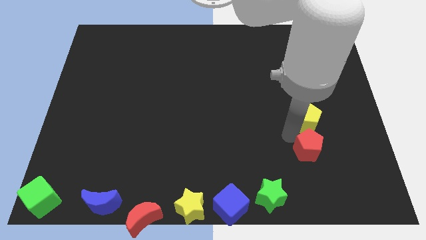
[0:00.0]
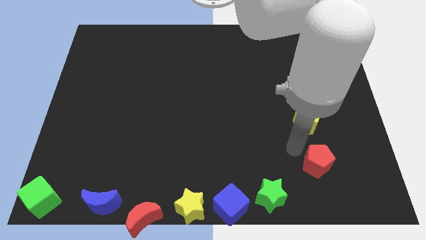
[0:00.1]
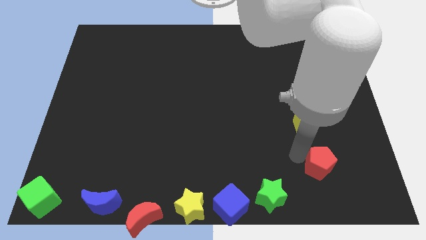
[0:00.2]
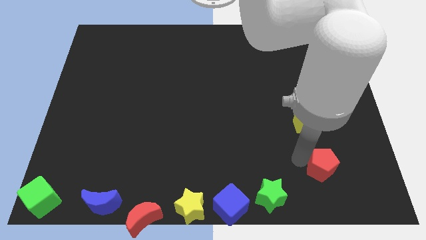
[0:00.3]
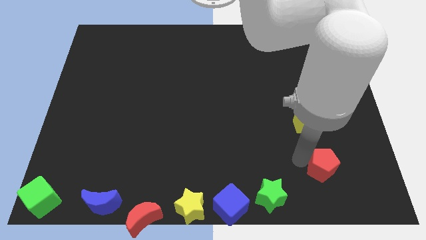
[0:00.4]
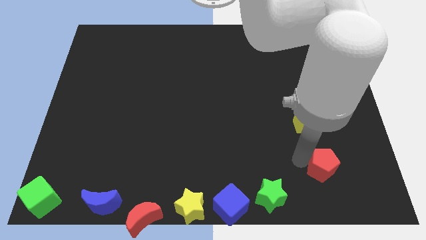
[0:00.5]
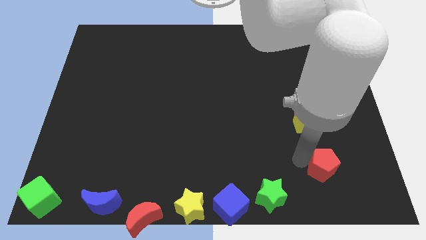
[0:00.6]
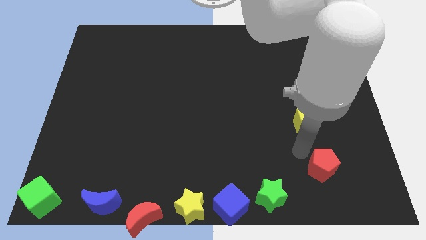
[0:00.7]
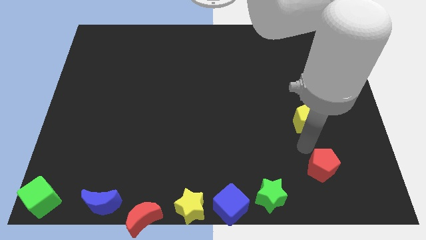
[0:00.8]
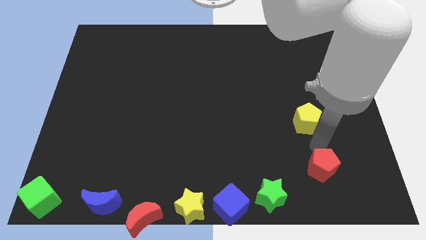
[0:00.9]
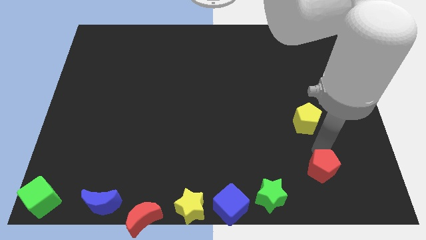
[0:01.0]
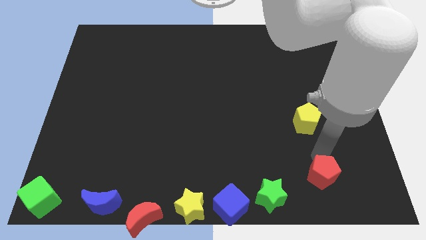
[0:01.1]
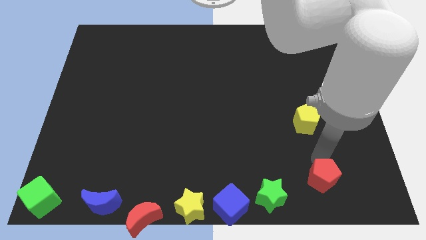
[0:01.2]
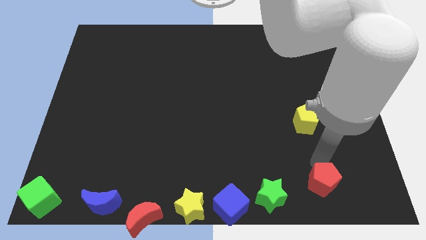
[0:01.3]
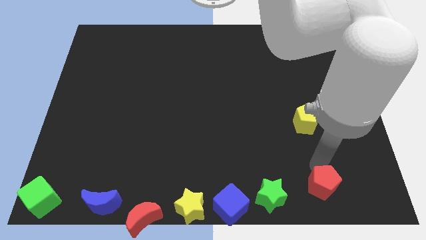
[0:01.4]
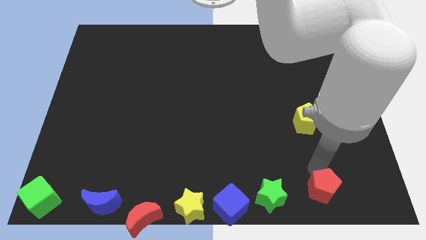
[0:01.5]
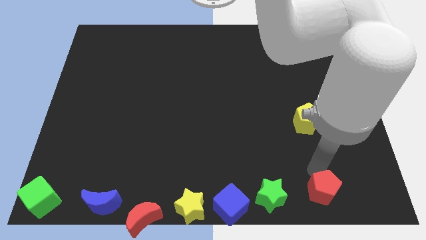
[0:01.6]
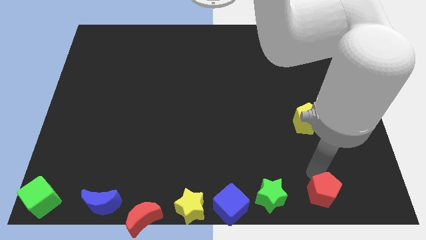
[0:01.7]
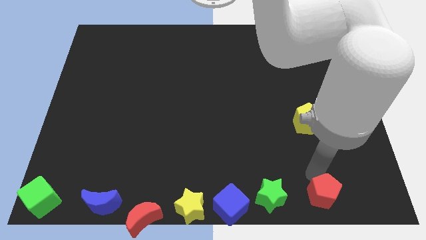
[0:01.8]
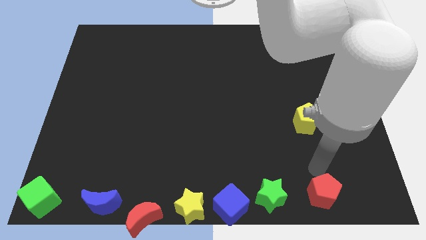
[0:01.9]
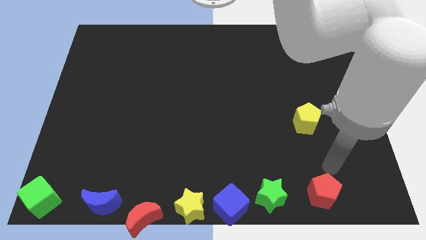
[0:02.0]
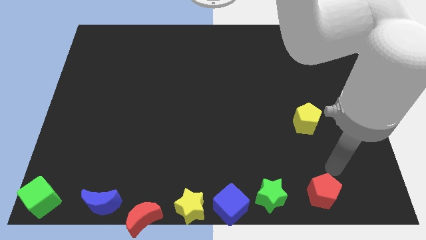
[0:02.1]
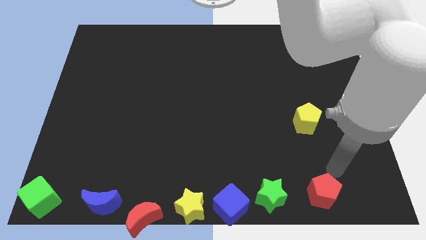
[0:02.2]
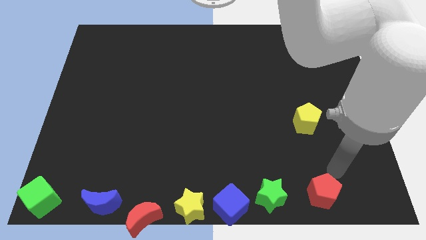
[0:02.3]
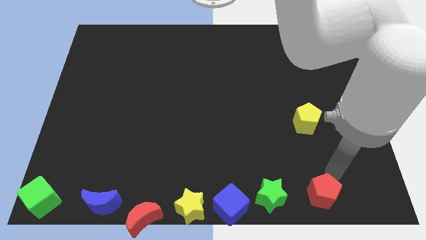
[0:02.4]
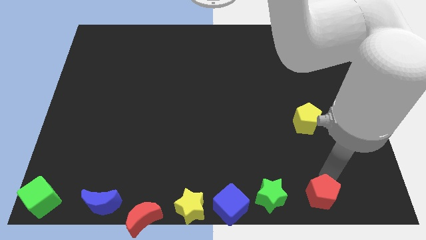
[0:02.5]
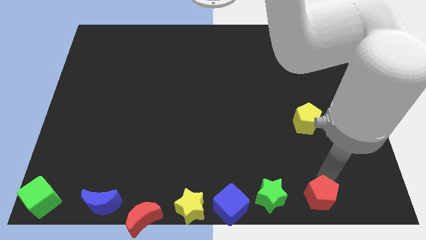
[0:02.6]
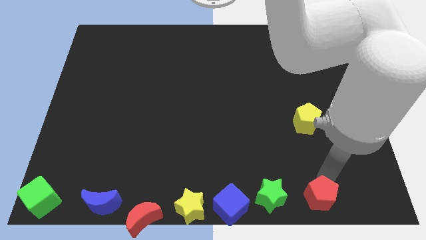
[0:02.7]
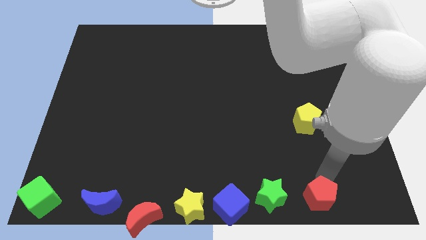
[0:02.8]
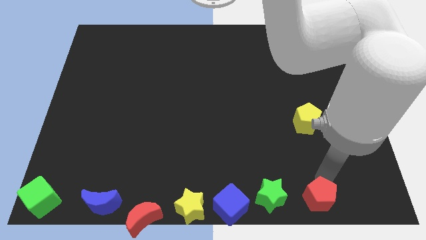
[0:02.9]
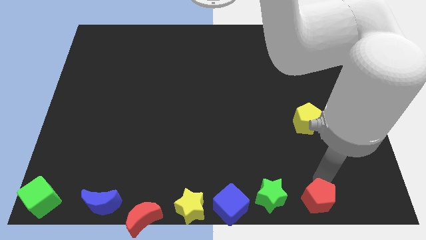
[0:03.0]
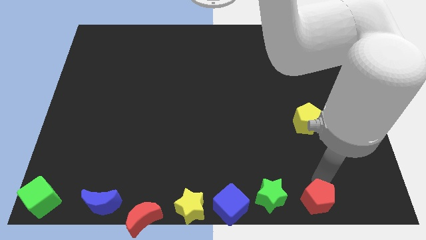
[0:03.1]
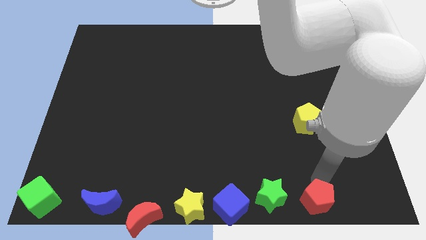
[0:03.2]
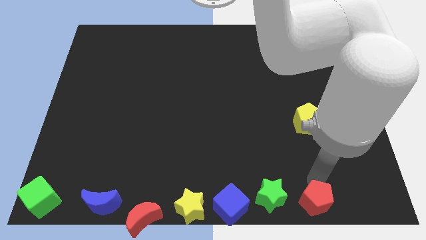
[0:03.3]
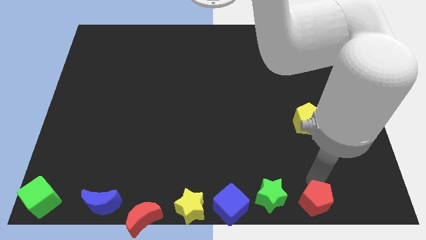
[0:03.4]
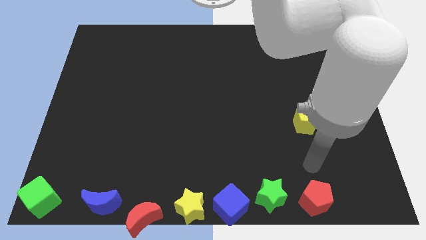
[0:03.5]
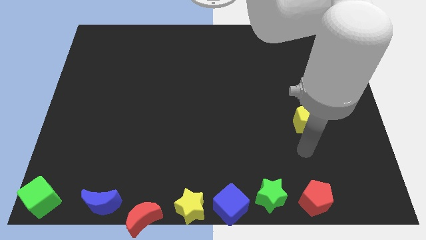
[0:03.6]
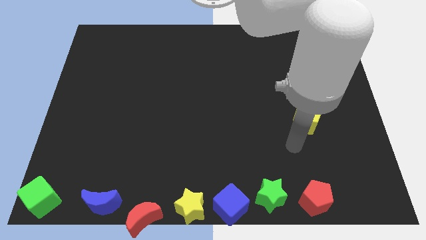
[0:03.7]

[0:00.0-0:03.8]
move the red pentagon to the right of the green star

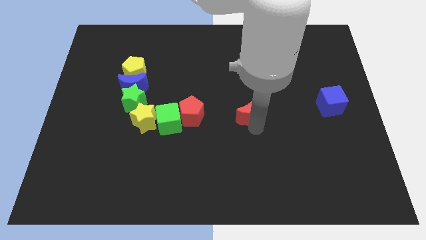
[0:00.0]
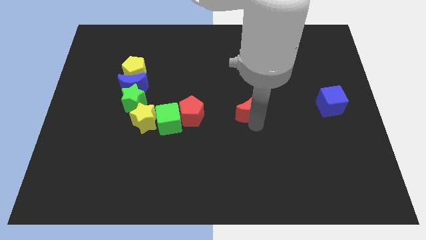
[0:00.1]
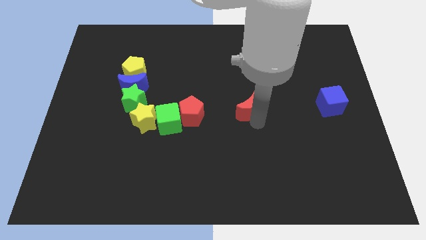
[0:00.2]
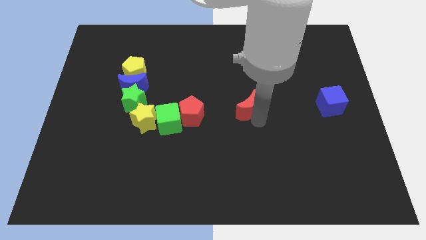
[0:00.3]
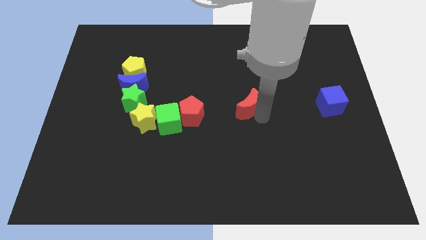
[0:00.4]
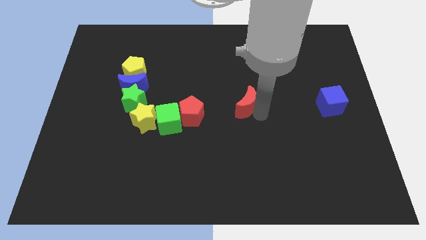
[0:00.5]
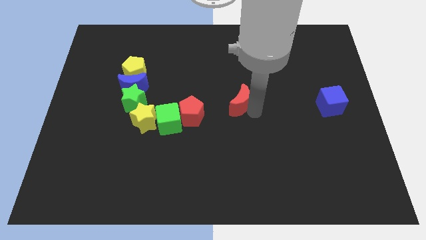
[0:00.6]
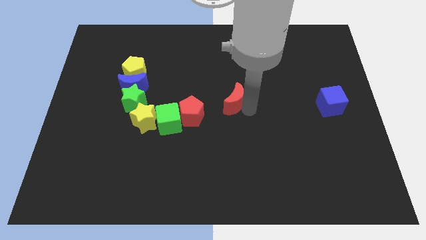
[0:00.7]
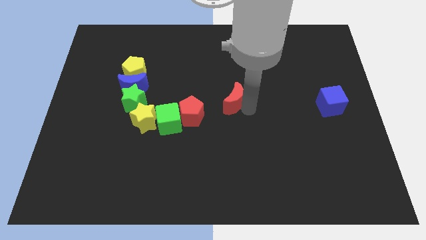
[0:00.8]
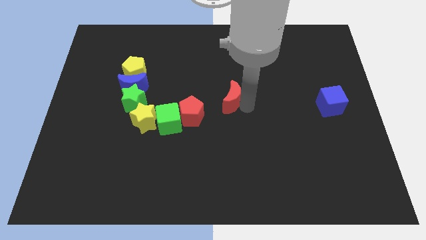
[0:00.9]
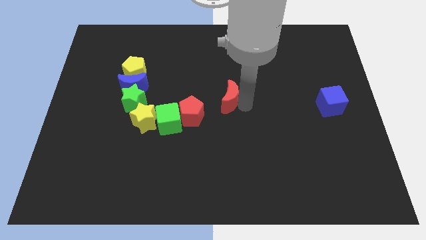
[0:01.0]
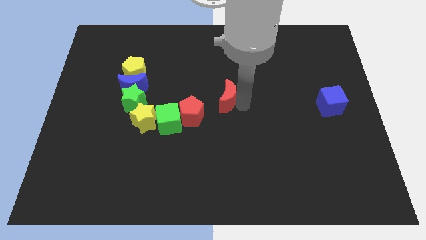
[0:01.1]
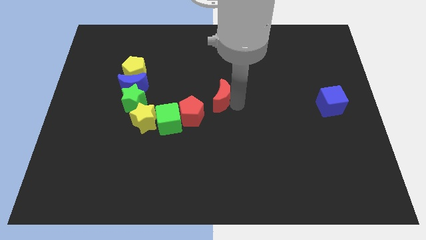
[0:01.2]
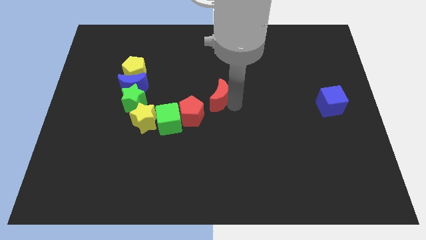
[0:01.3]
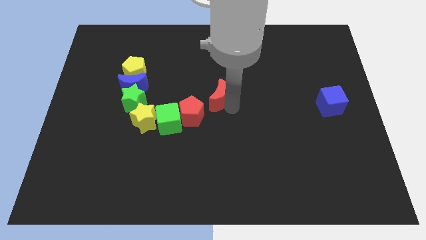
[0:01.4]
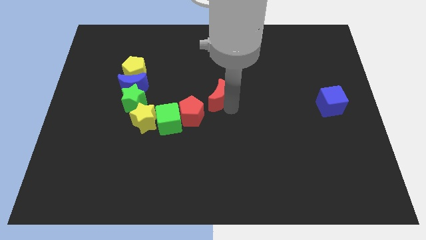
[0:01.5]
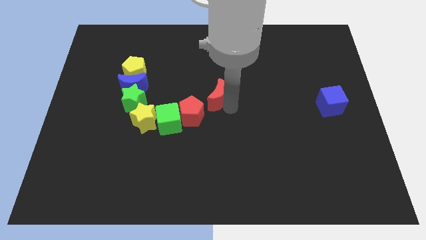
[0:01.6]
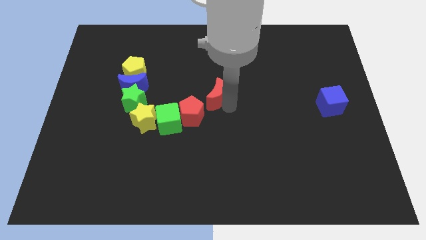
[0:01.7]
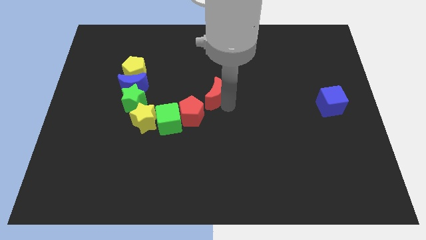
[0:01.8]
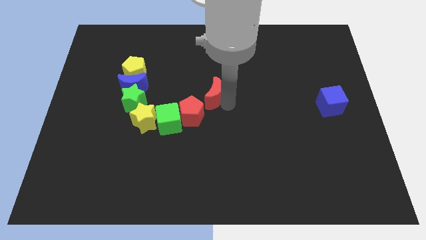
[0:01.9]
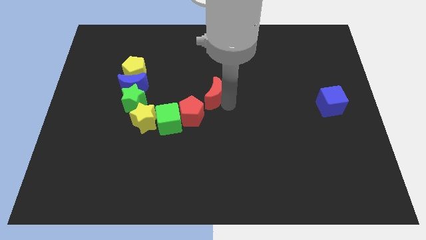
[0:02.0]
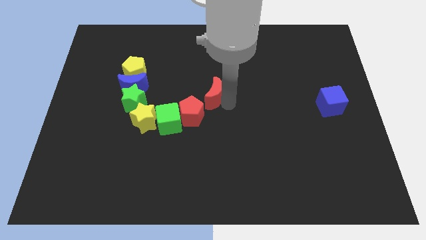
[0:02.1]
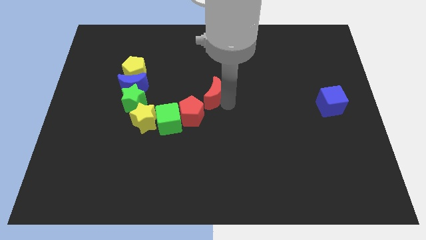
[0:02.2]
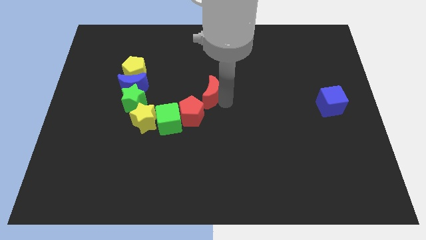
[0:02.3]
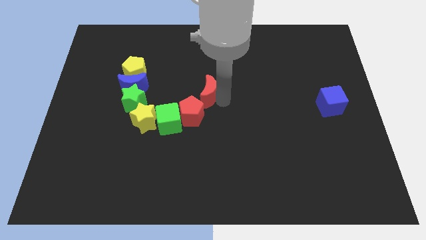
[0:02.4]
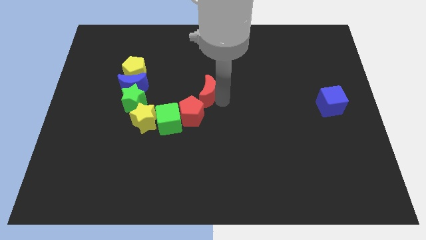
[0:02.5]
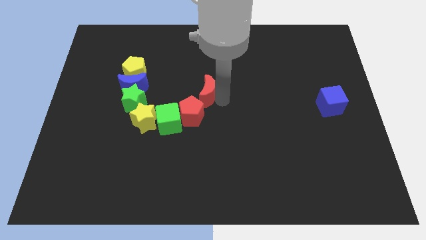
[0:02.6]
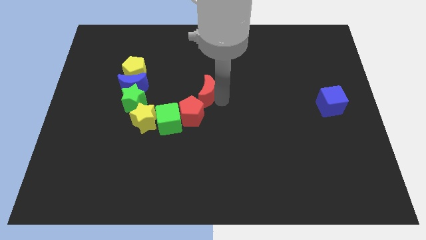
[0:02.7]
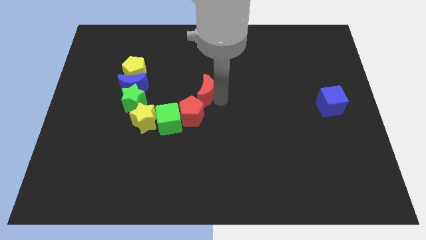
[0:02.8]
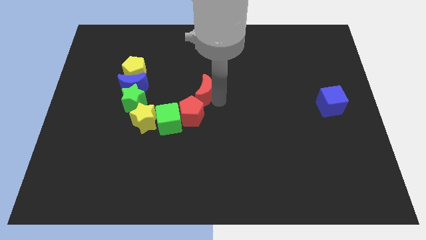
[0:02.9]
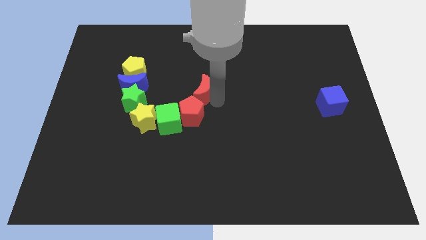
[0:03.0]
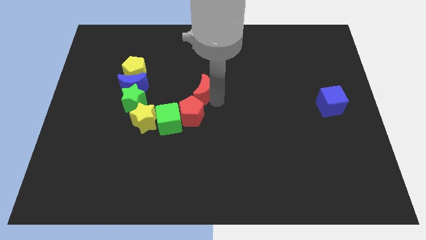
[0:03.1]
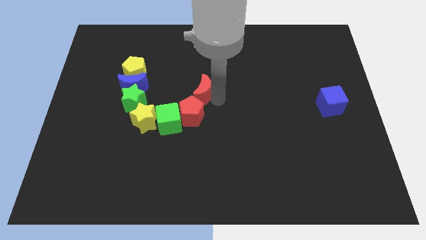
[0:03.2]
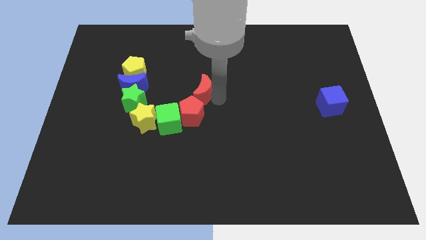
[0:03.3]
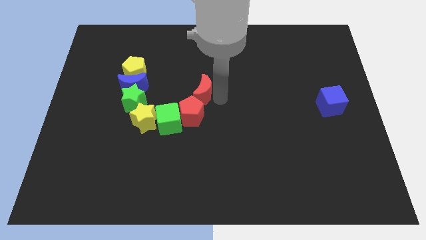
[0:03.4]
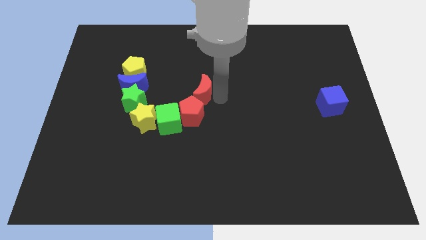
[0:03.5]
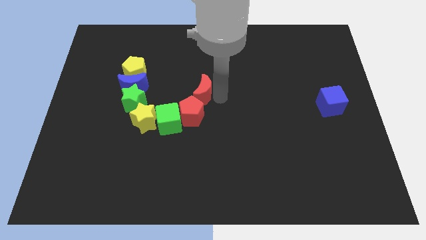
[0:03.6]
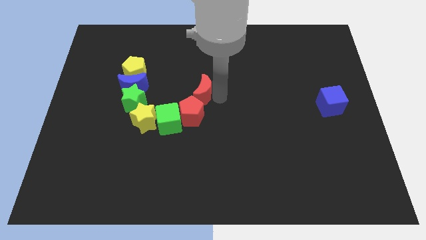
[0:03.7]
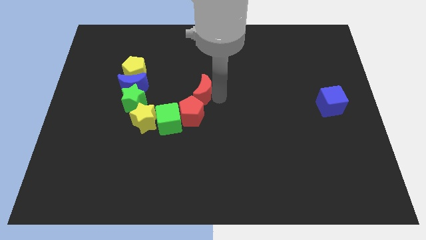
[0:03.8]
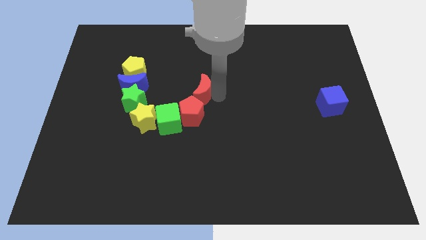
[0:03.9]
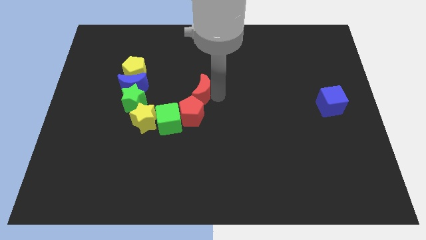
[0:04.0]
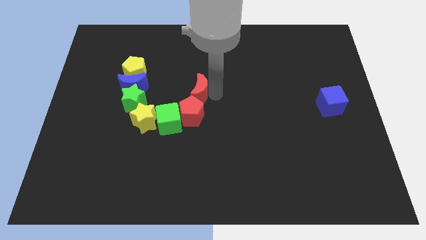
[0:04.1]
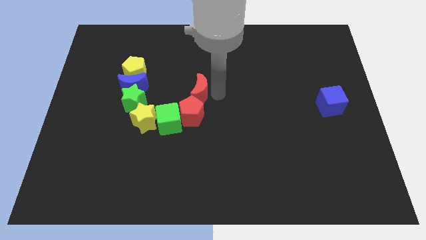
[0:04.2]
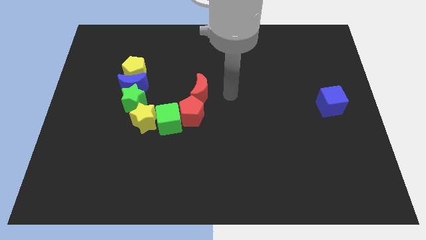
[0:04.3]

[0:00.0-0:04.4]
place the red moon at the top of the red pentagon

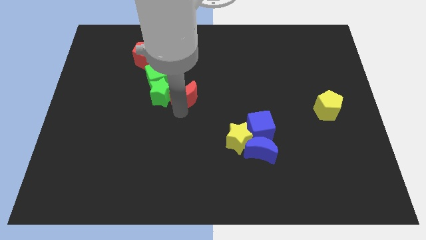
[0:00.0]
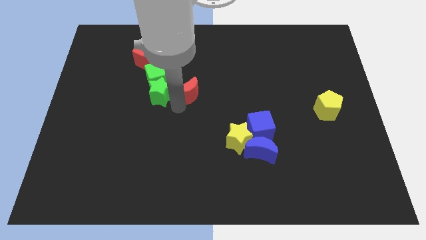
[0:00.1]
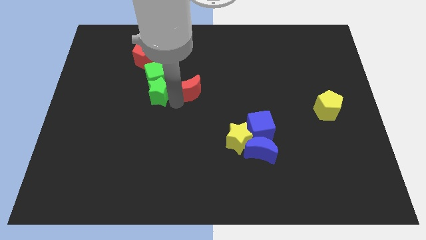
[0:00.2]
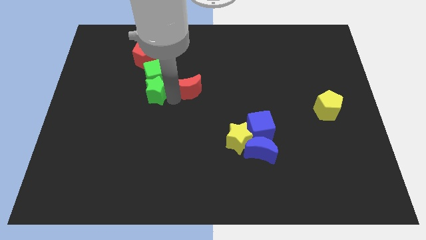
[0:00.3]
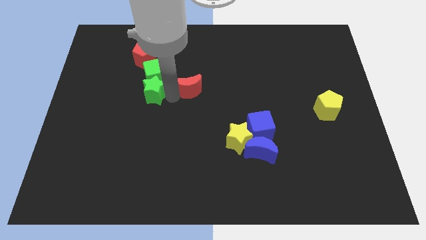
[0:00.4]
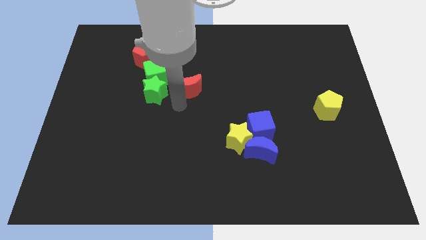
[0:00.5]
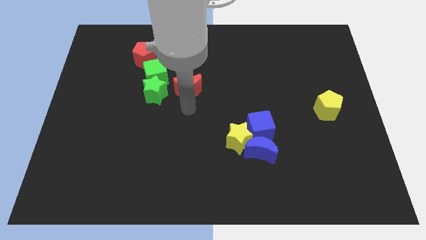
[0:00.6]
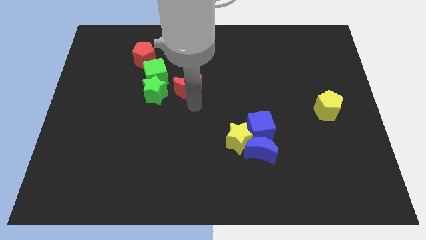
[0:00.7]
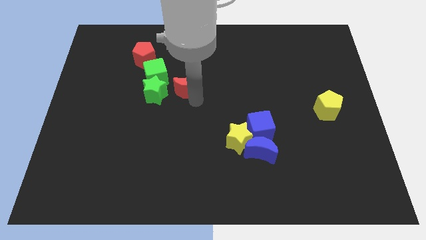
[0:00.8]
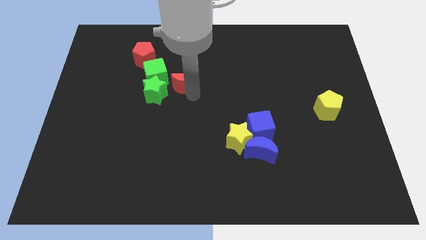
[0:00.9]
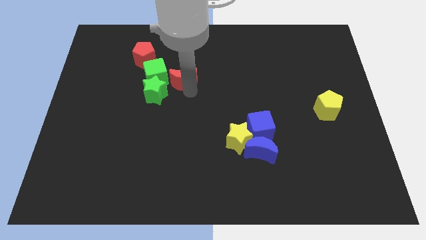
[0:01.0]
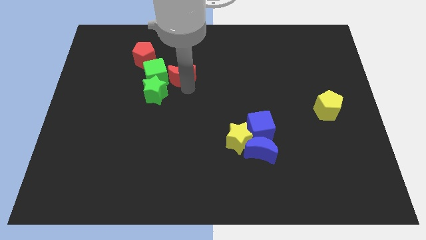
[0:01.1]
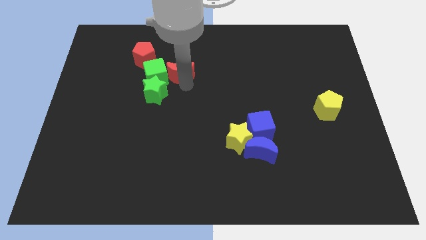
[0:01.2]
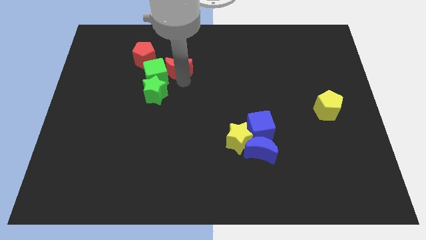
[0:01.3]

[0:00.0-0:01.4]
move the red crescent to the right side of green cube
